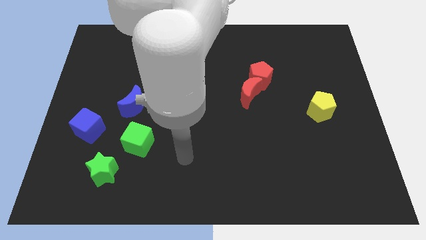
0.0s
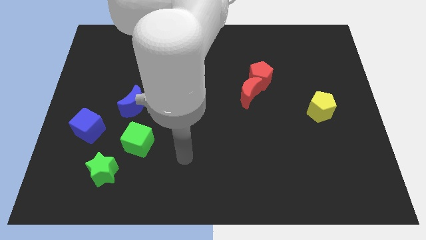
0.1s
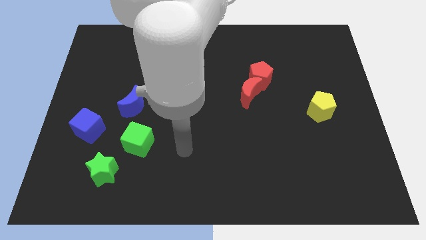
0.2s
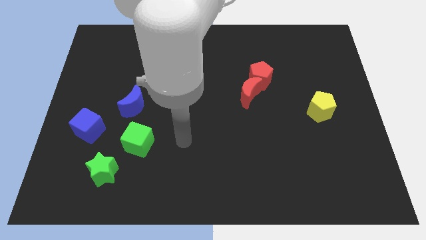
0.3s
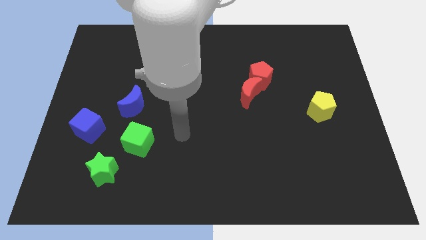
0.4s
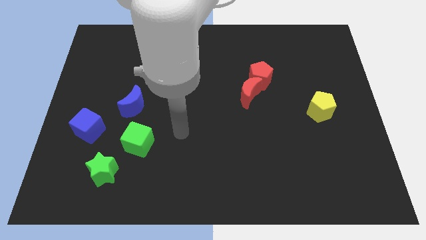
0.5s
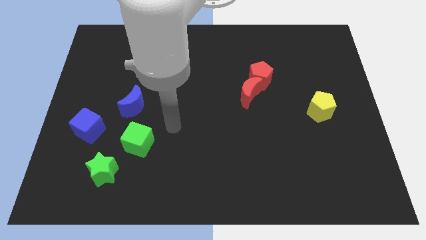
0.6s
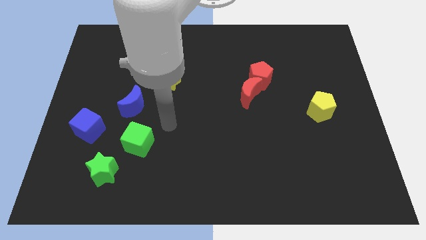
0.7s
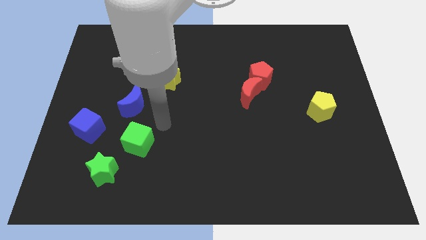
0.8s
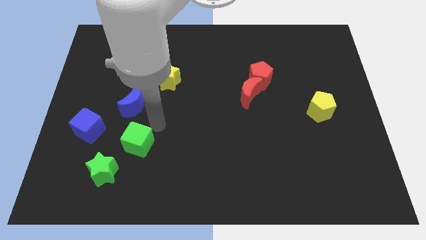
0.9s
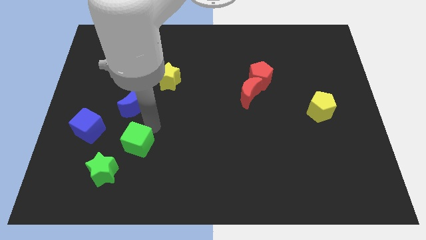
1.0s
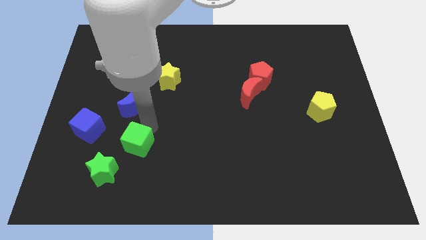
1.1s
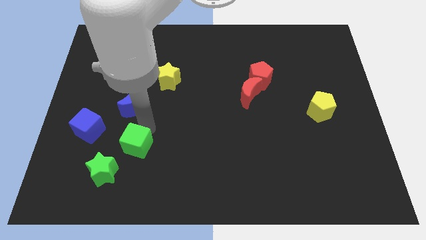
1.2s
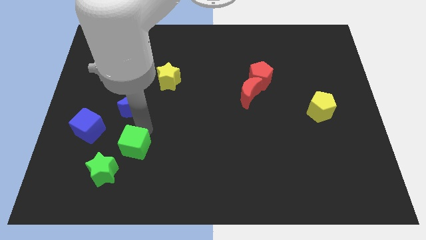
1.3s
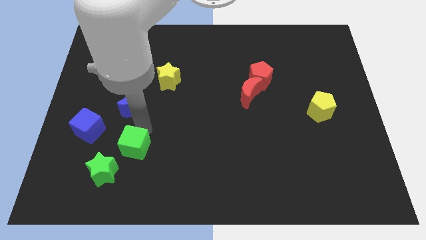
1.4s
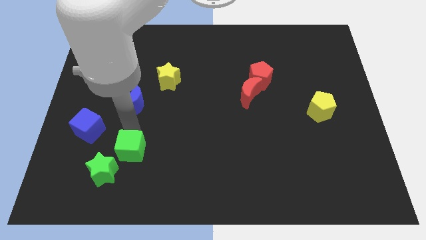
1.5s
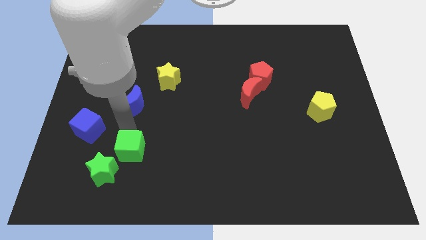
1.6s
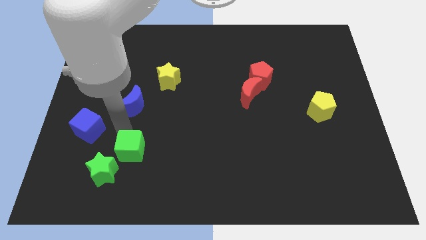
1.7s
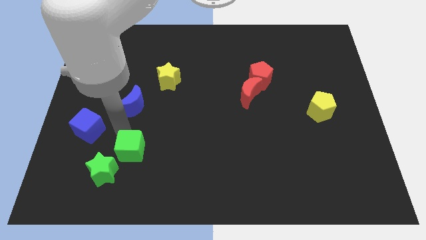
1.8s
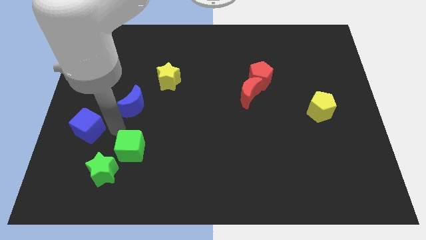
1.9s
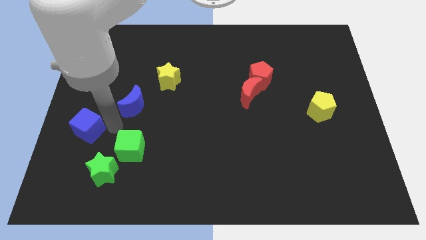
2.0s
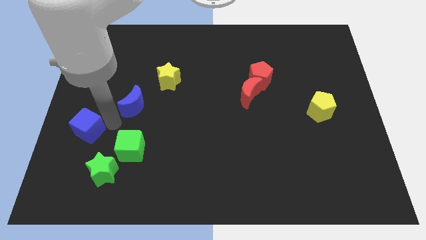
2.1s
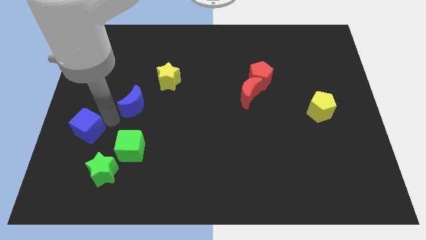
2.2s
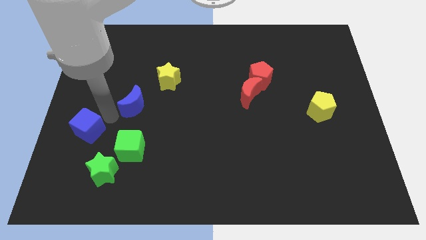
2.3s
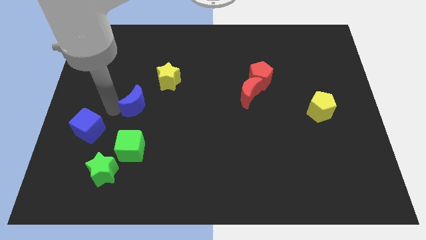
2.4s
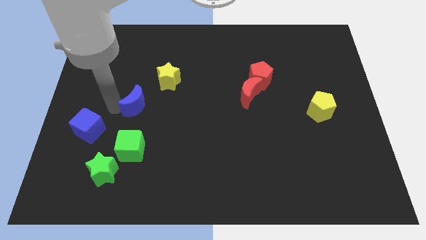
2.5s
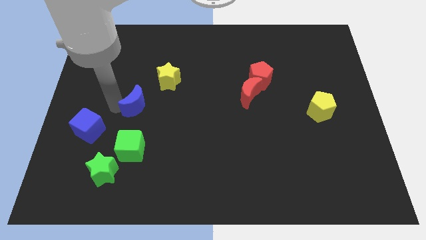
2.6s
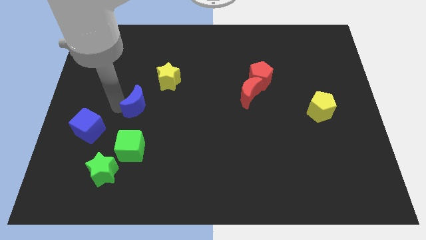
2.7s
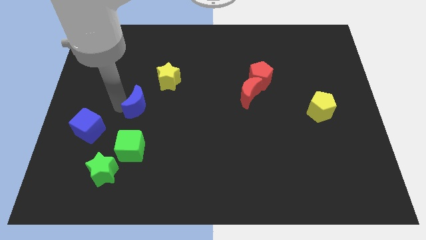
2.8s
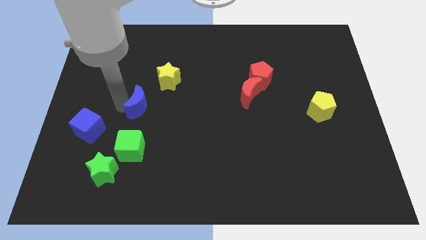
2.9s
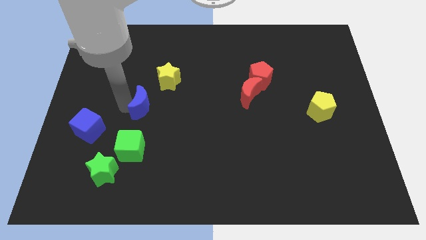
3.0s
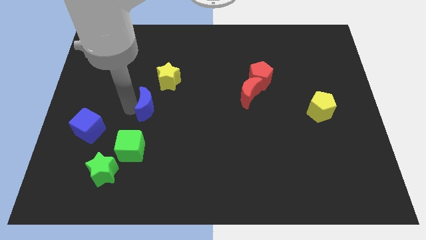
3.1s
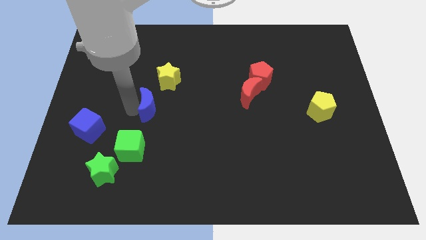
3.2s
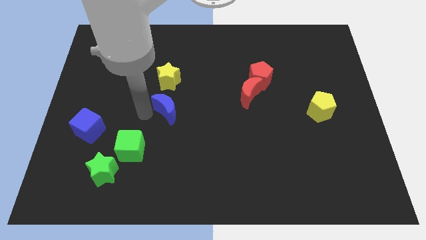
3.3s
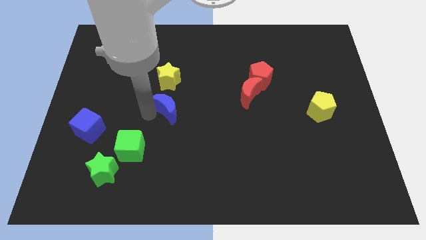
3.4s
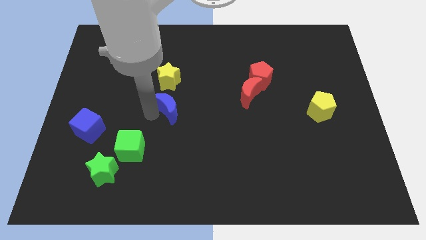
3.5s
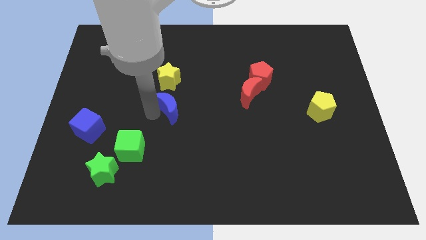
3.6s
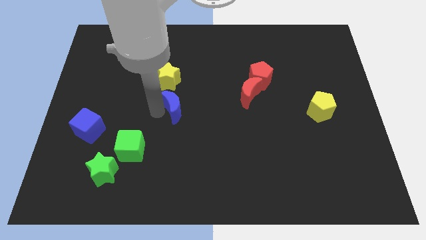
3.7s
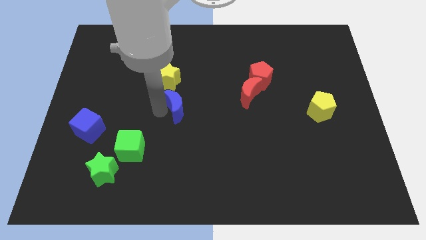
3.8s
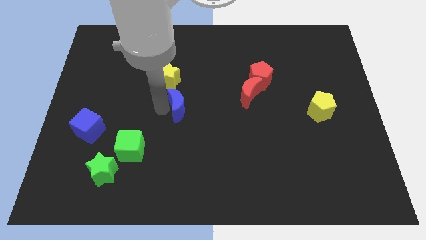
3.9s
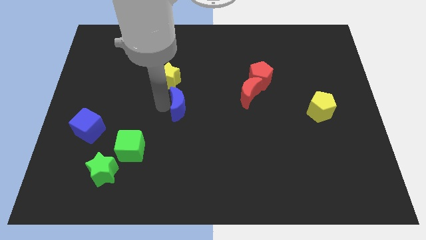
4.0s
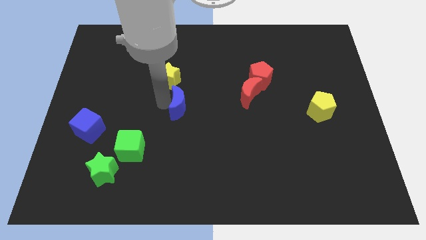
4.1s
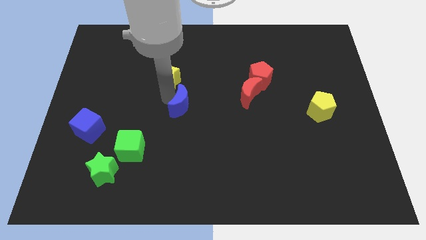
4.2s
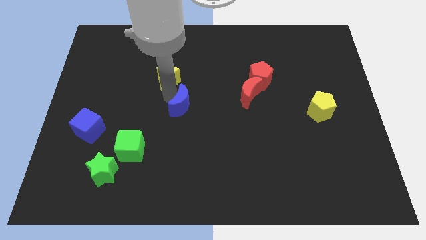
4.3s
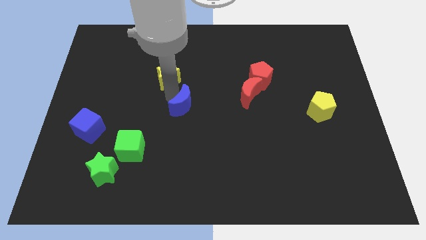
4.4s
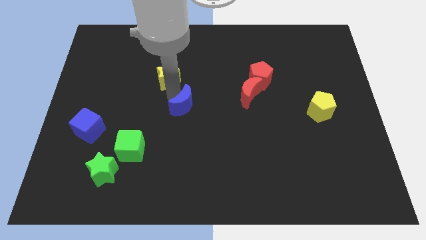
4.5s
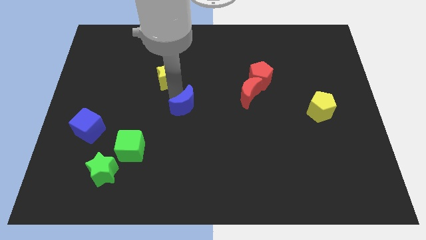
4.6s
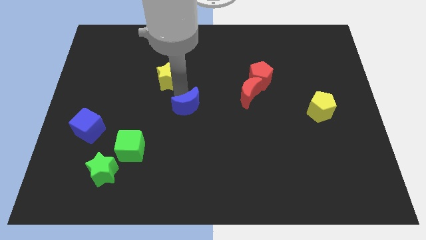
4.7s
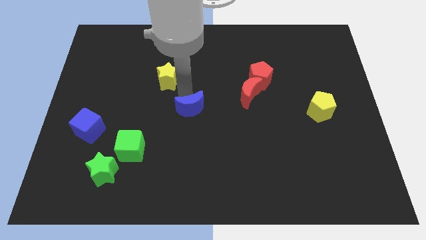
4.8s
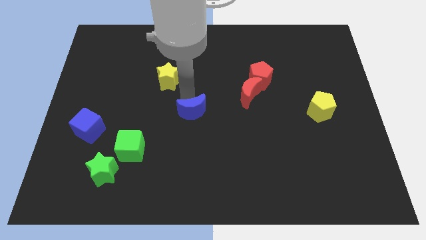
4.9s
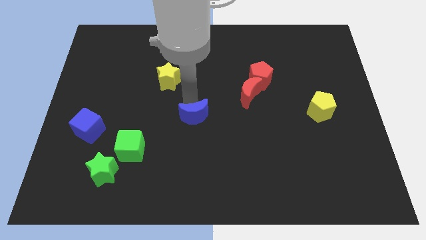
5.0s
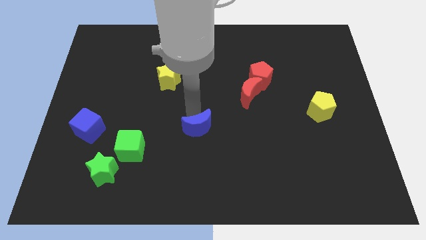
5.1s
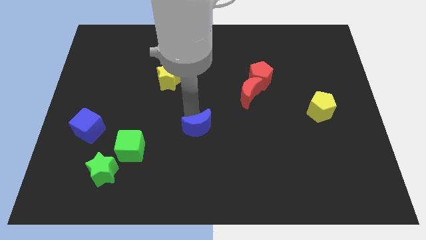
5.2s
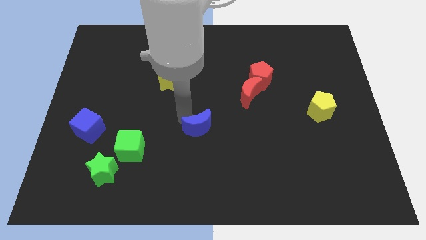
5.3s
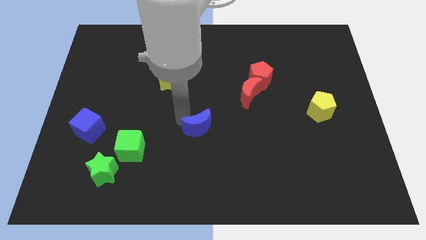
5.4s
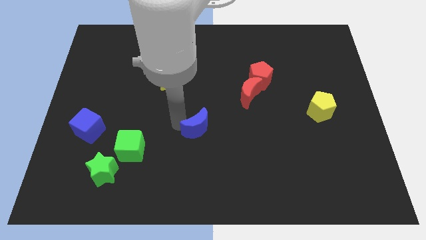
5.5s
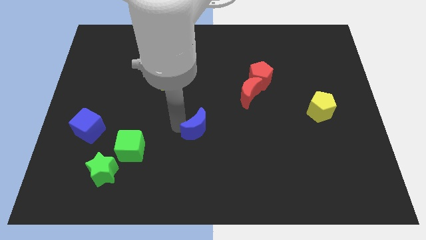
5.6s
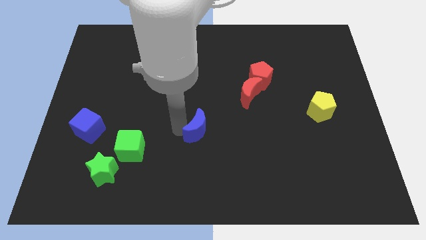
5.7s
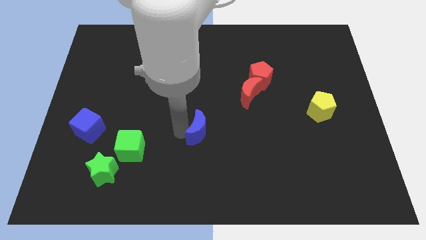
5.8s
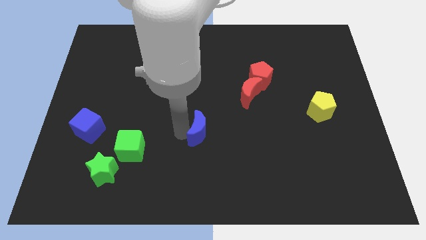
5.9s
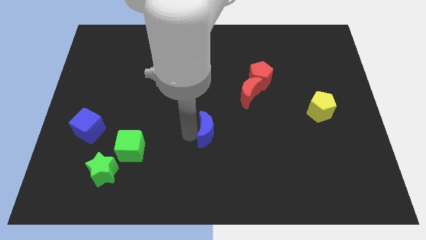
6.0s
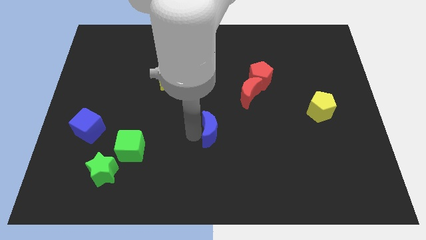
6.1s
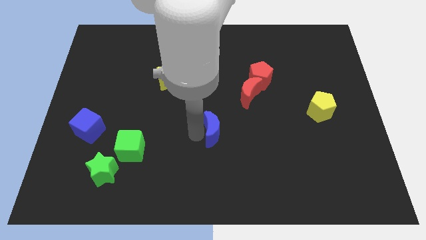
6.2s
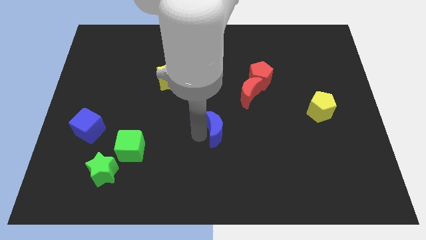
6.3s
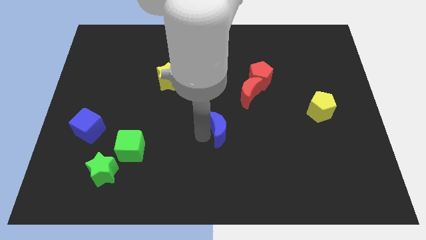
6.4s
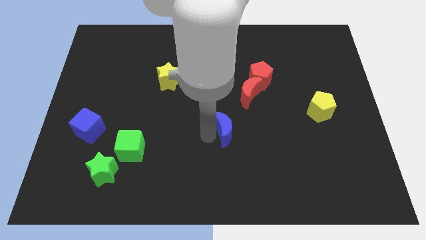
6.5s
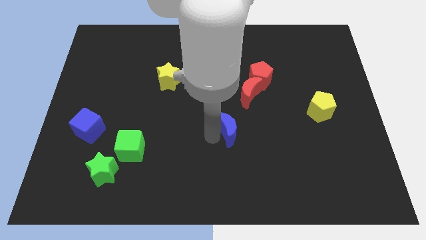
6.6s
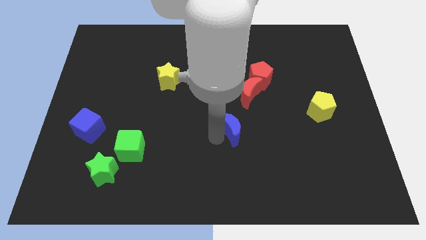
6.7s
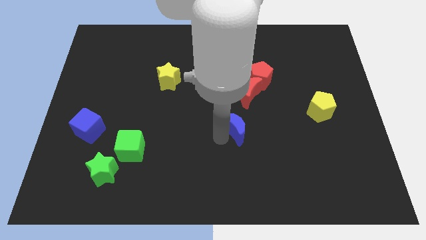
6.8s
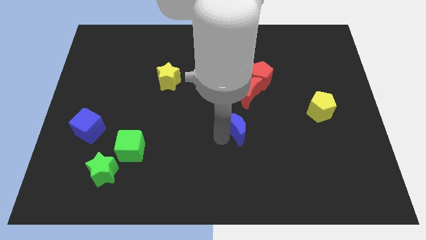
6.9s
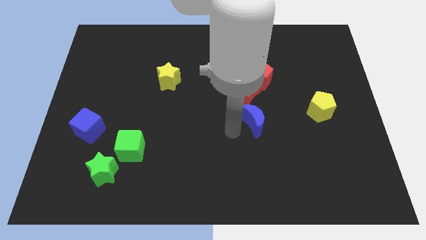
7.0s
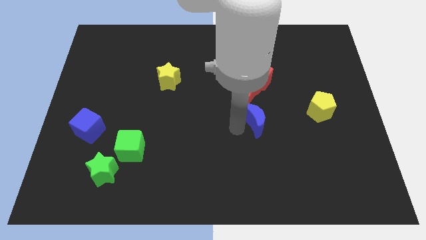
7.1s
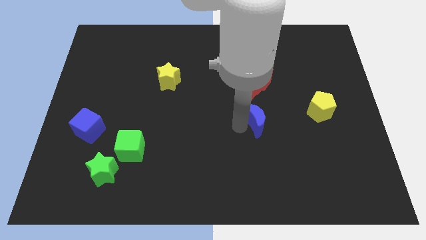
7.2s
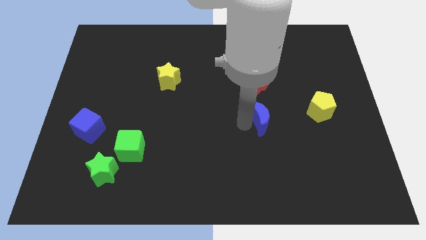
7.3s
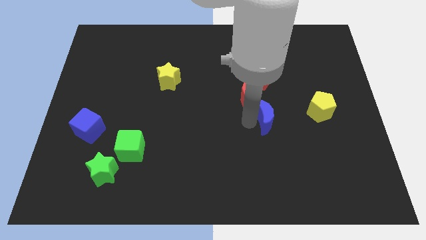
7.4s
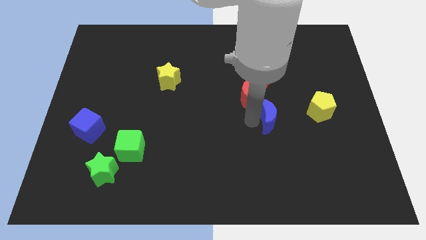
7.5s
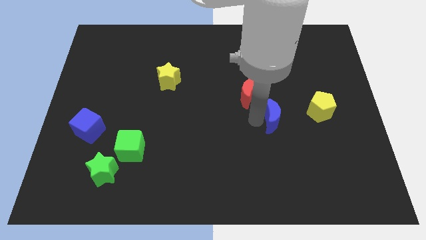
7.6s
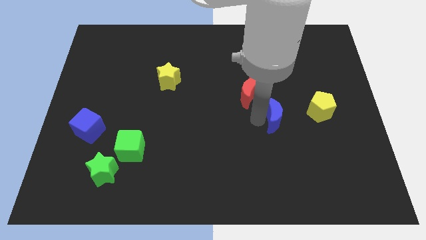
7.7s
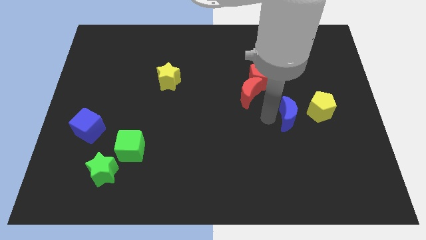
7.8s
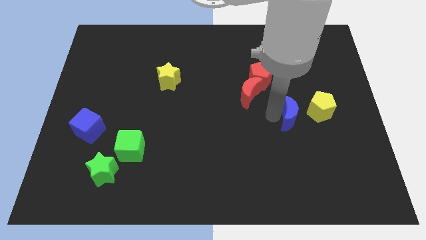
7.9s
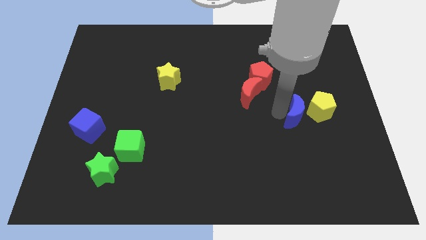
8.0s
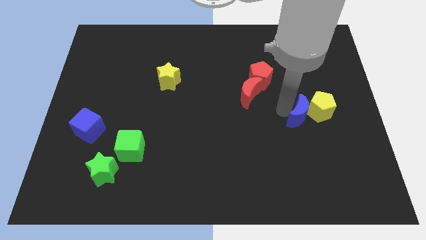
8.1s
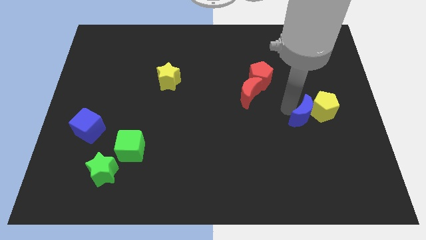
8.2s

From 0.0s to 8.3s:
put the blue moon close to the yellow pentagon
